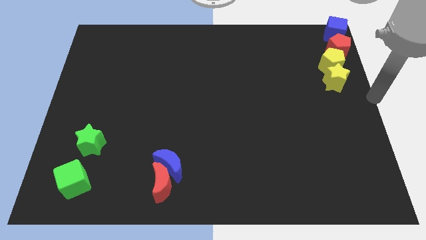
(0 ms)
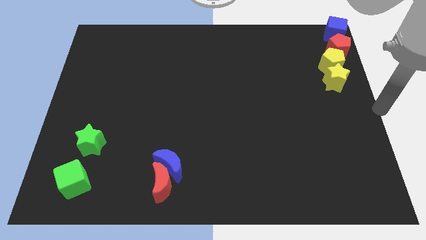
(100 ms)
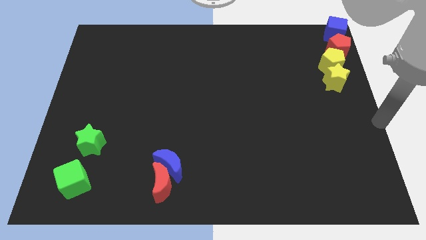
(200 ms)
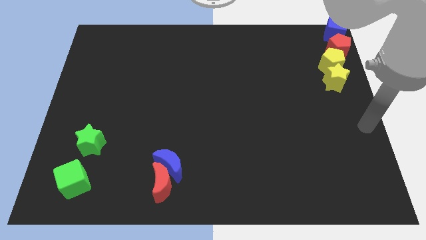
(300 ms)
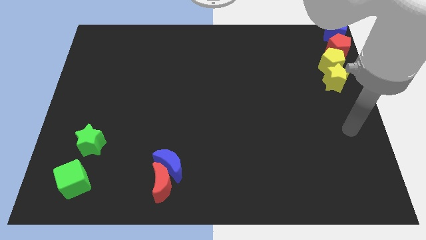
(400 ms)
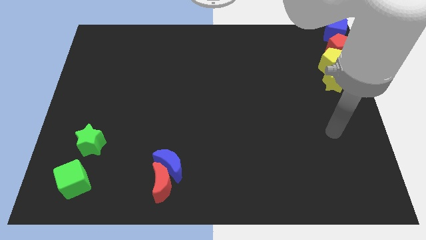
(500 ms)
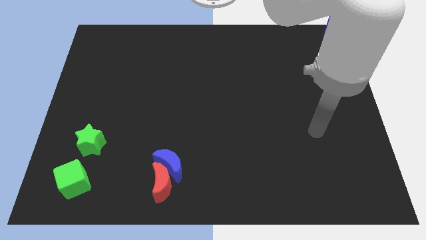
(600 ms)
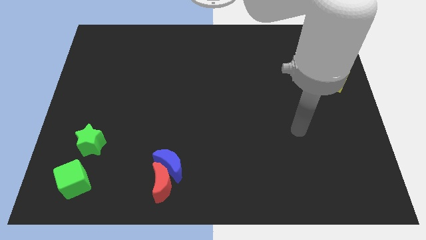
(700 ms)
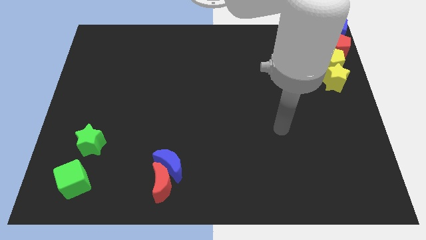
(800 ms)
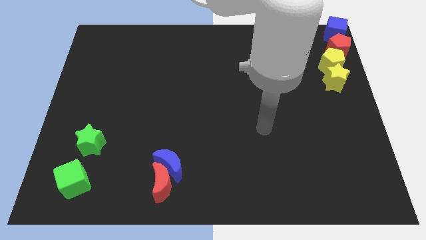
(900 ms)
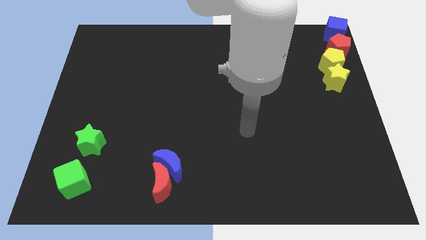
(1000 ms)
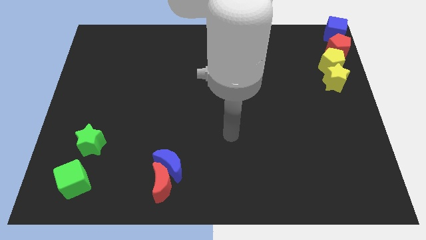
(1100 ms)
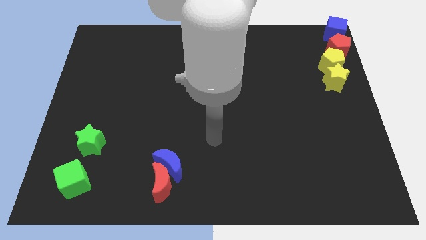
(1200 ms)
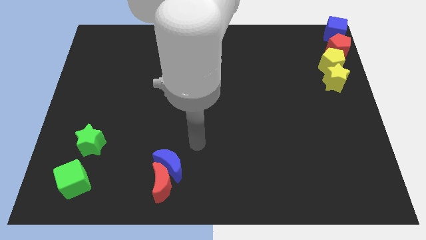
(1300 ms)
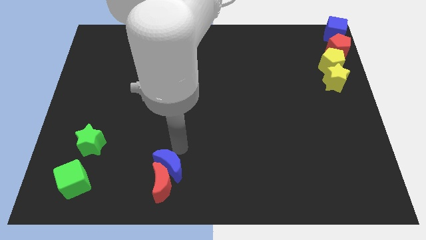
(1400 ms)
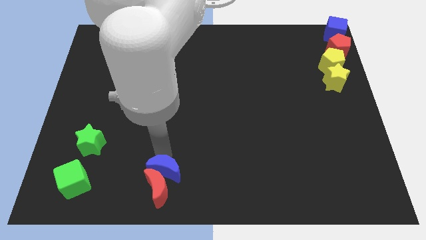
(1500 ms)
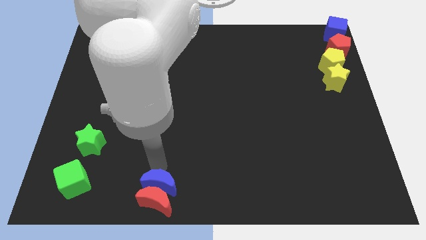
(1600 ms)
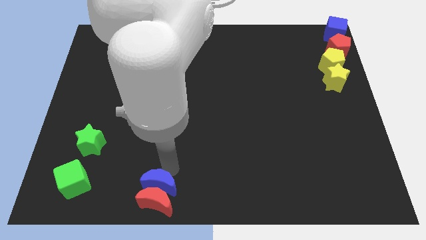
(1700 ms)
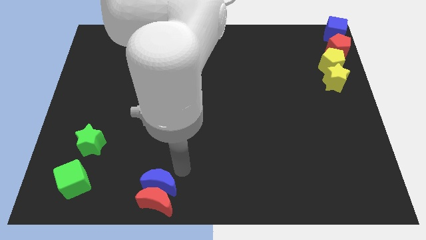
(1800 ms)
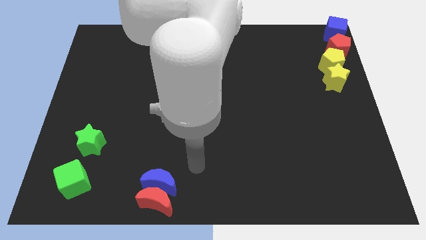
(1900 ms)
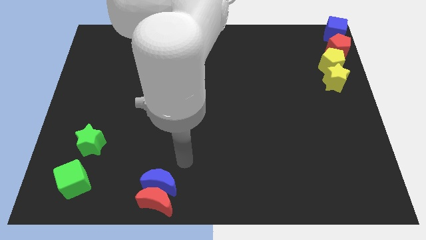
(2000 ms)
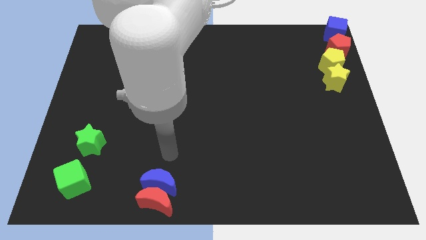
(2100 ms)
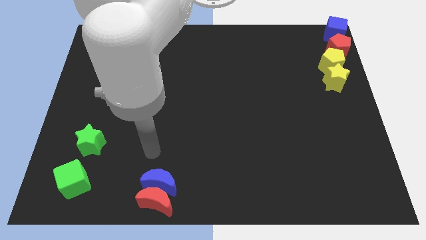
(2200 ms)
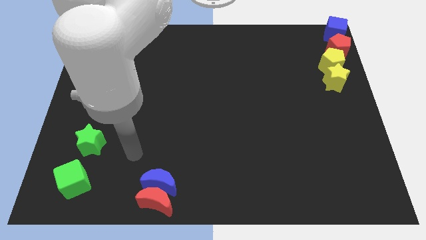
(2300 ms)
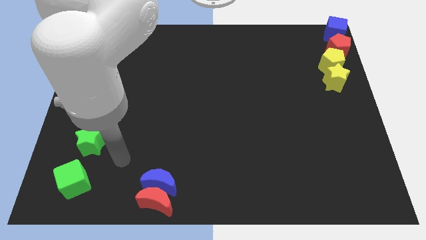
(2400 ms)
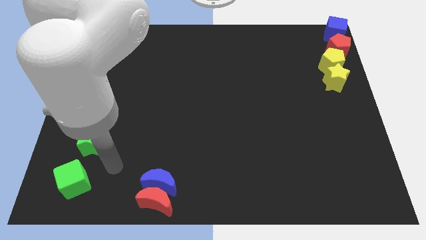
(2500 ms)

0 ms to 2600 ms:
push the red and blue crescents towards the bottom side of the board

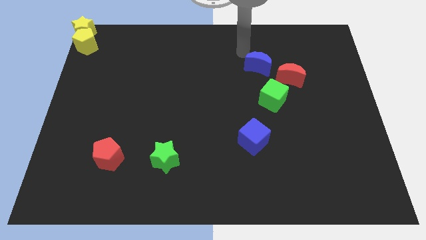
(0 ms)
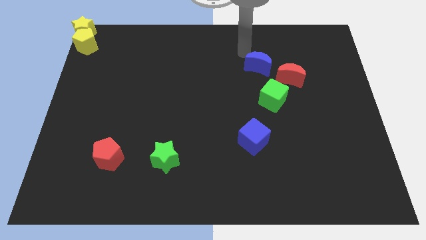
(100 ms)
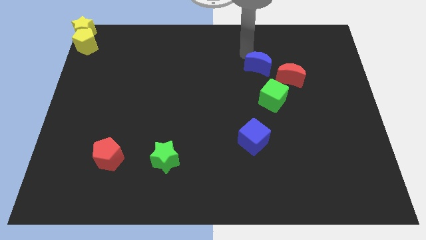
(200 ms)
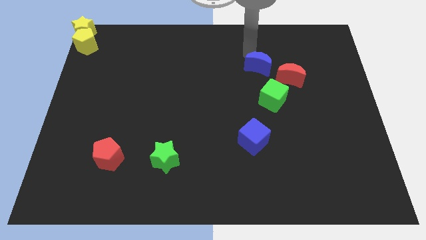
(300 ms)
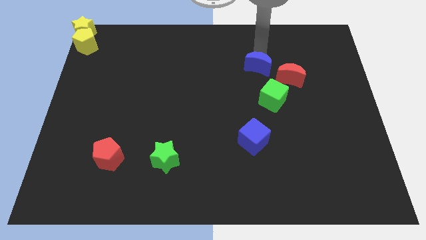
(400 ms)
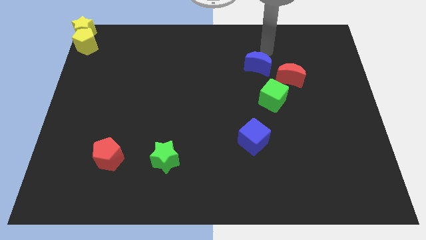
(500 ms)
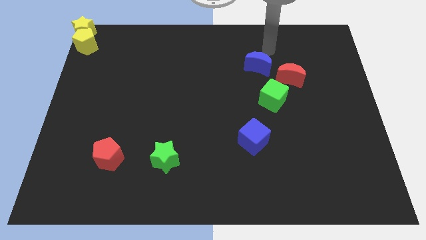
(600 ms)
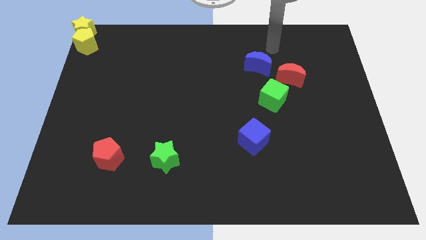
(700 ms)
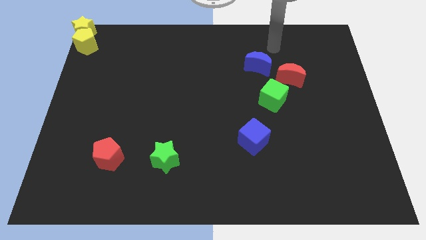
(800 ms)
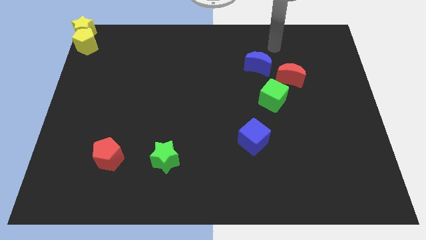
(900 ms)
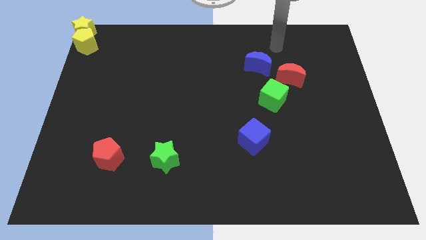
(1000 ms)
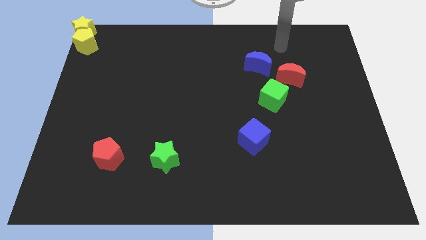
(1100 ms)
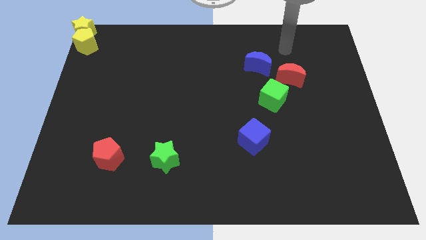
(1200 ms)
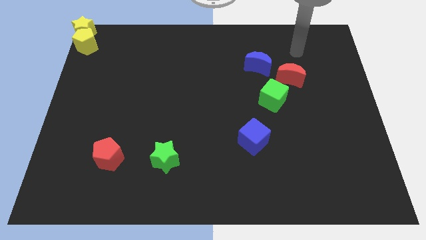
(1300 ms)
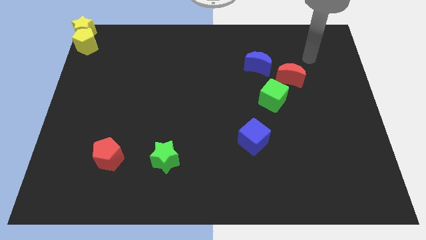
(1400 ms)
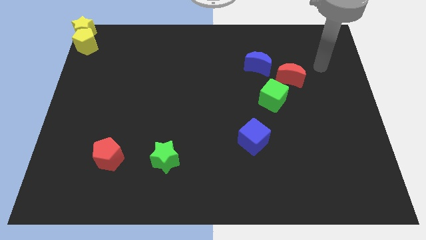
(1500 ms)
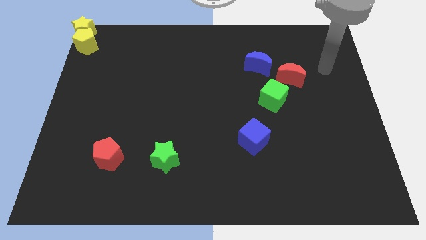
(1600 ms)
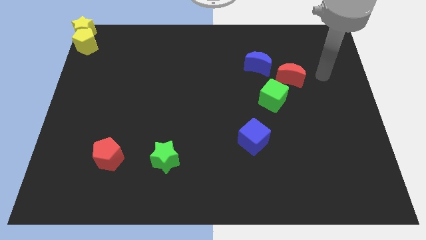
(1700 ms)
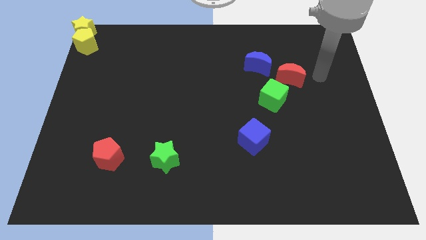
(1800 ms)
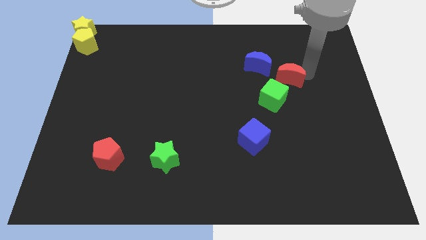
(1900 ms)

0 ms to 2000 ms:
point your arm at the top right side of the red moon

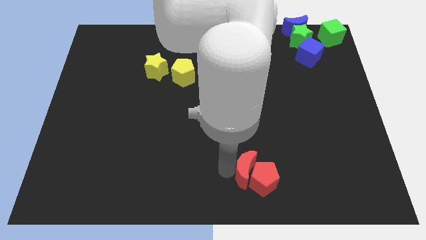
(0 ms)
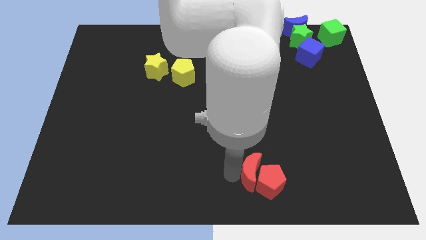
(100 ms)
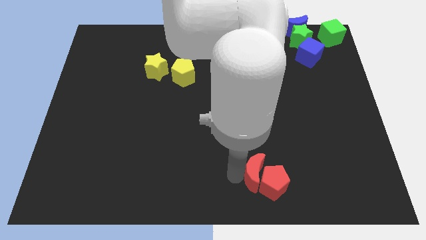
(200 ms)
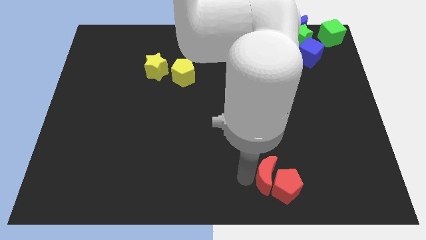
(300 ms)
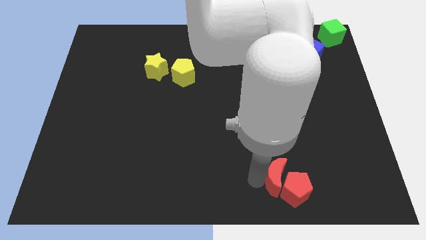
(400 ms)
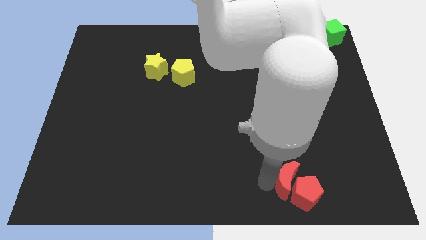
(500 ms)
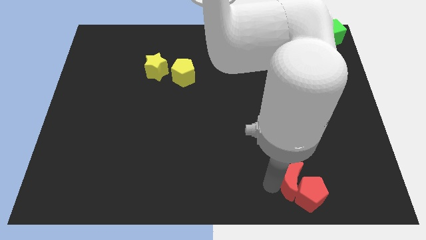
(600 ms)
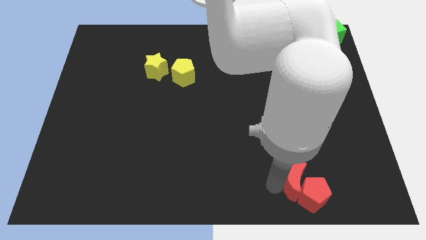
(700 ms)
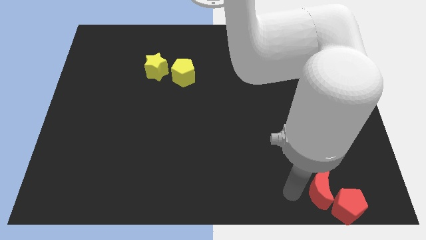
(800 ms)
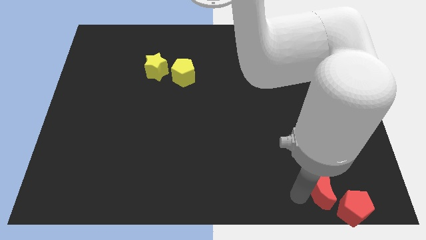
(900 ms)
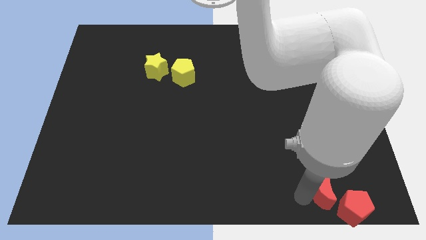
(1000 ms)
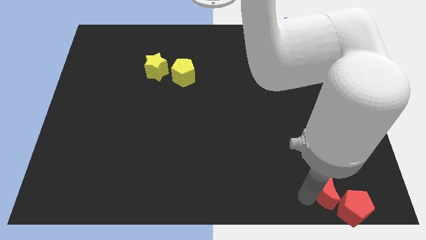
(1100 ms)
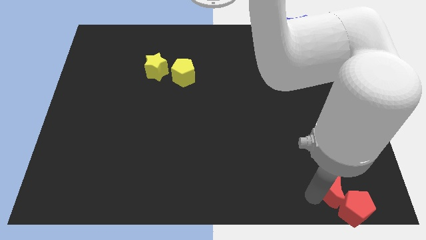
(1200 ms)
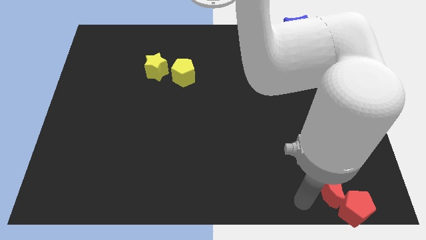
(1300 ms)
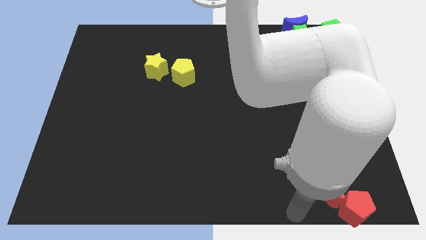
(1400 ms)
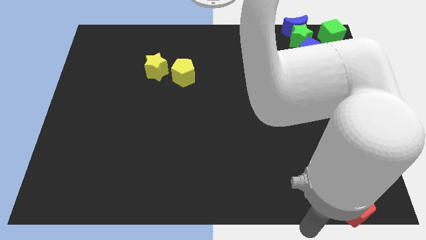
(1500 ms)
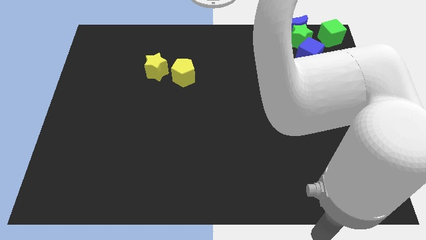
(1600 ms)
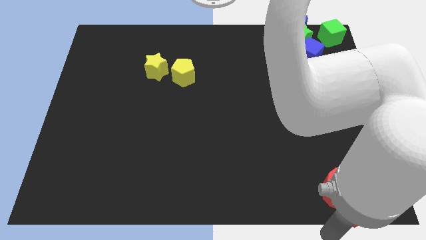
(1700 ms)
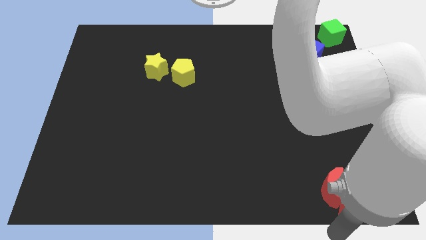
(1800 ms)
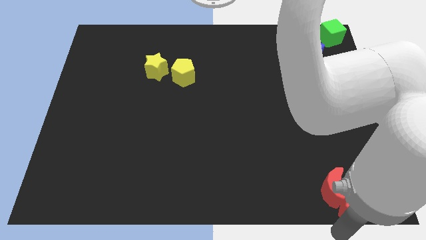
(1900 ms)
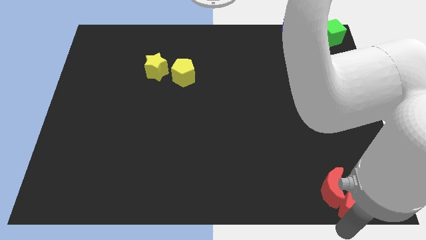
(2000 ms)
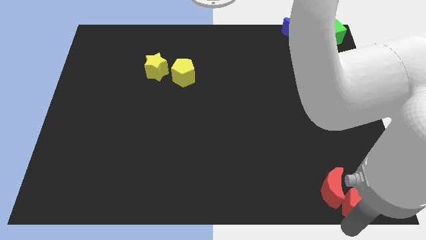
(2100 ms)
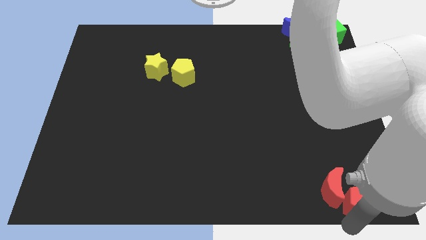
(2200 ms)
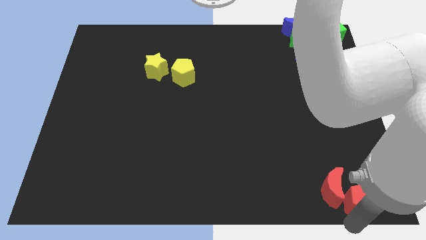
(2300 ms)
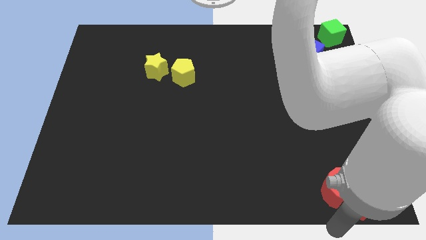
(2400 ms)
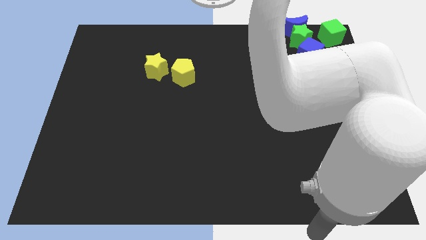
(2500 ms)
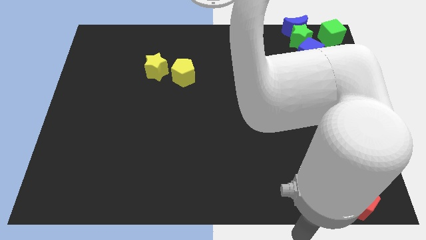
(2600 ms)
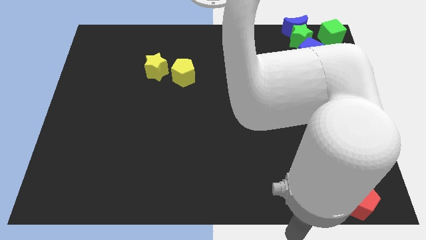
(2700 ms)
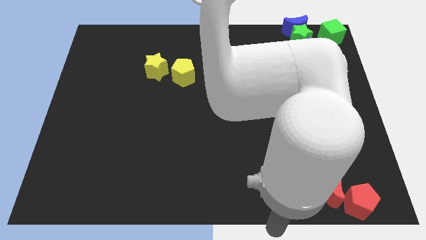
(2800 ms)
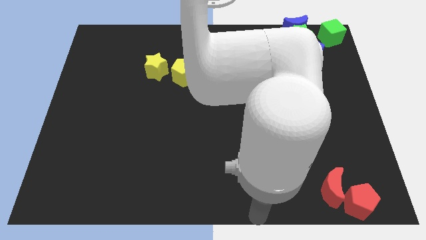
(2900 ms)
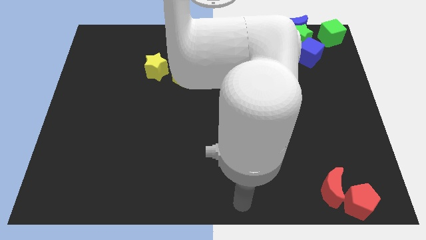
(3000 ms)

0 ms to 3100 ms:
move the red blocks to the bottom of the green cube

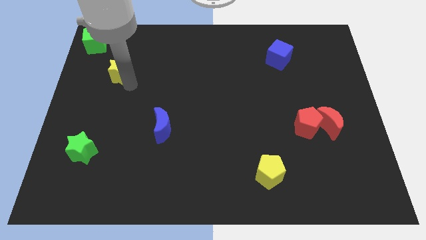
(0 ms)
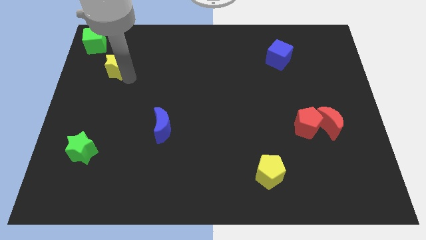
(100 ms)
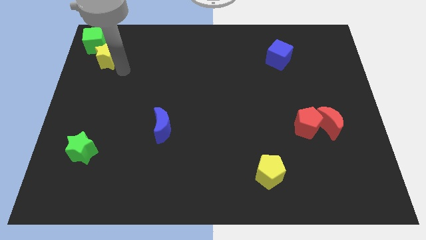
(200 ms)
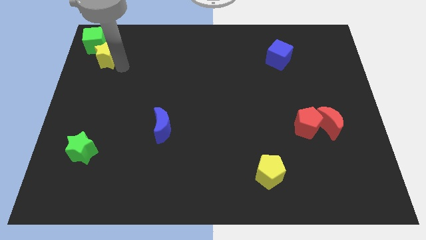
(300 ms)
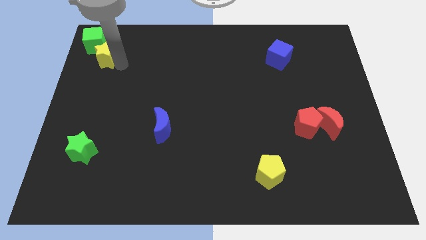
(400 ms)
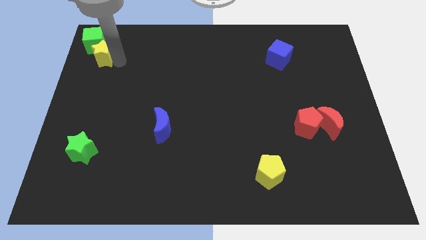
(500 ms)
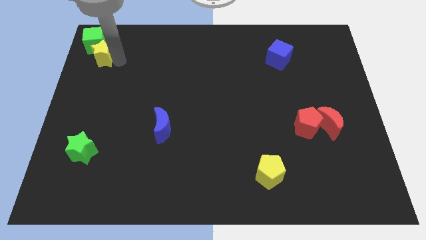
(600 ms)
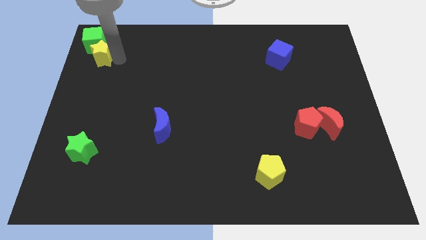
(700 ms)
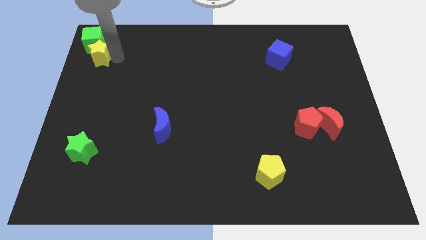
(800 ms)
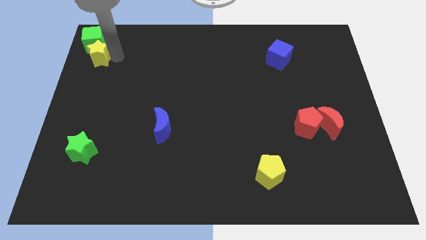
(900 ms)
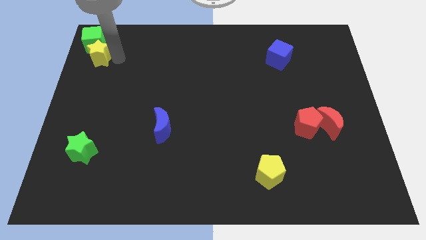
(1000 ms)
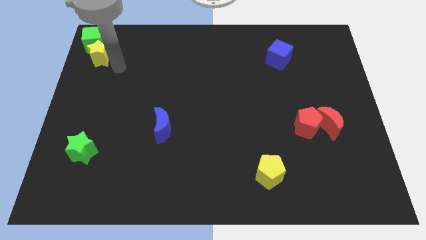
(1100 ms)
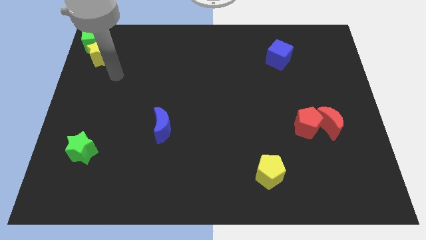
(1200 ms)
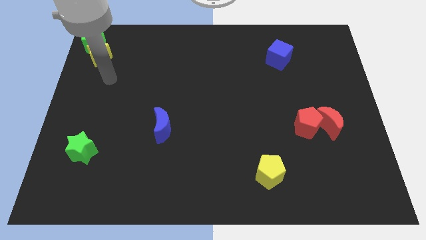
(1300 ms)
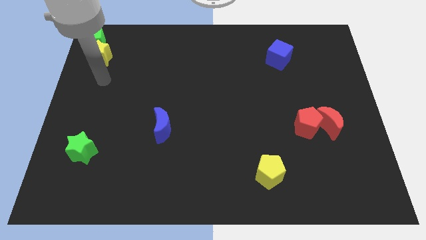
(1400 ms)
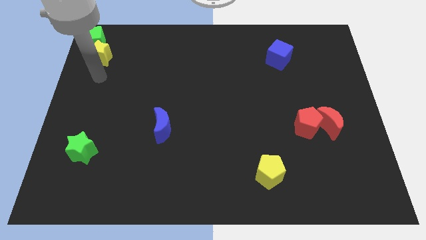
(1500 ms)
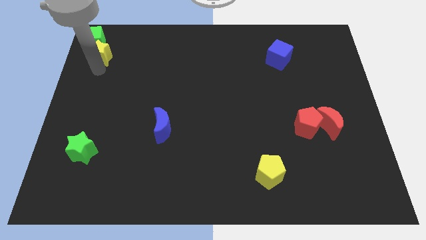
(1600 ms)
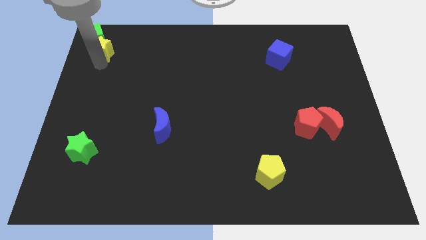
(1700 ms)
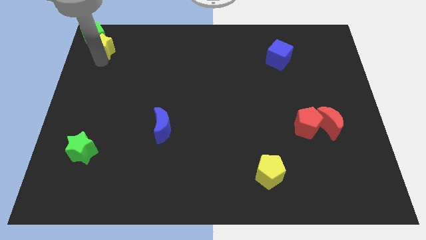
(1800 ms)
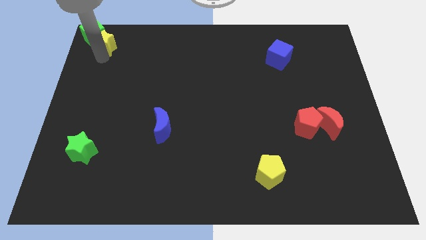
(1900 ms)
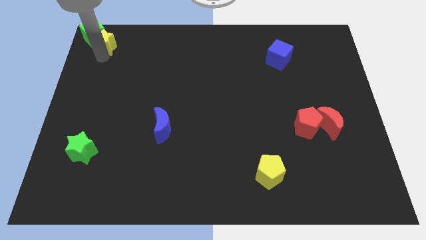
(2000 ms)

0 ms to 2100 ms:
place the yellow star at the top left
